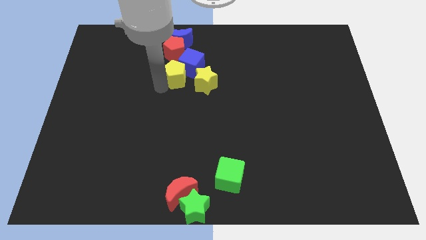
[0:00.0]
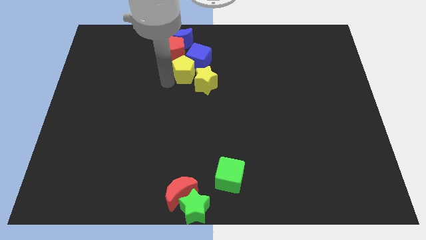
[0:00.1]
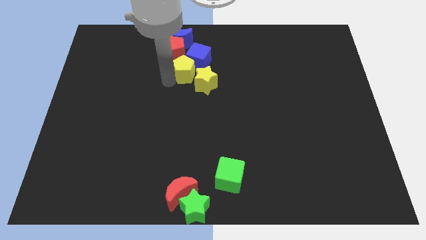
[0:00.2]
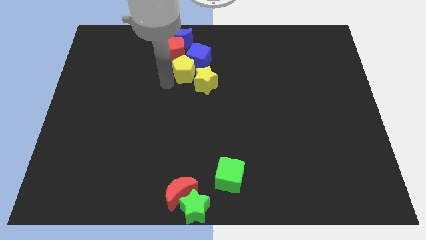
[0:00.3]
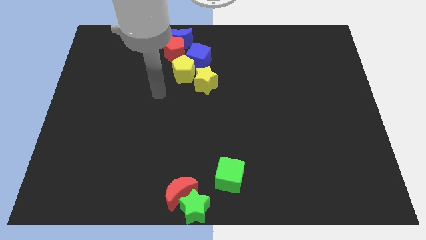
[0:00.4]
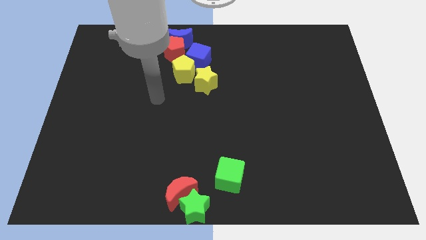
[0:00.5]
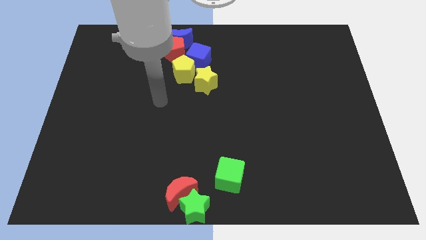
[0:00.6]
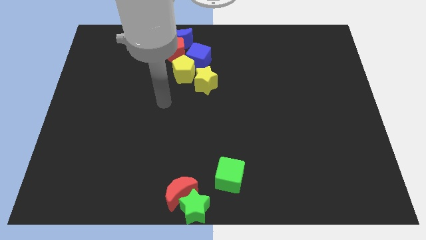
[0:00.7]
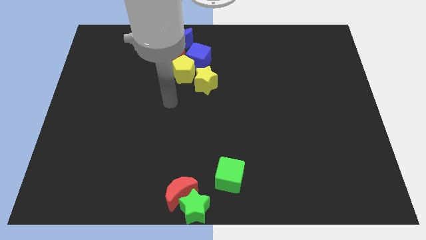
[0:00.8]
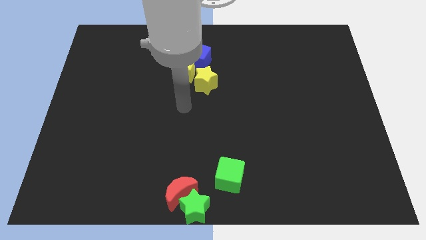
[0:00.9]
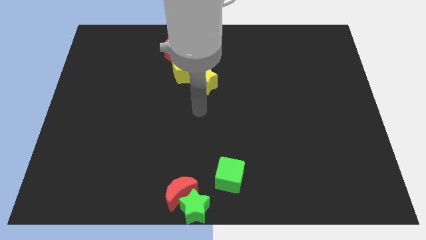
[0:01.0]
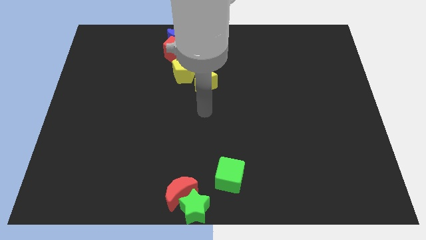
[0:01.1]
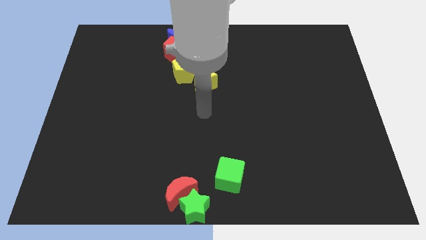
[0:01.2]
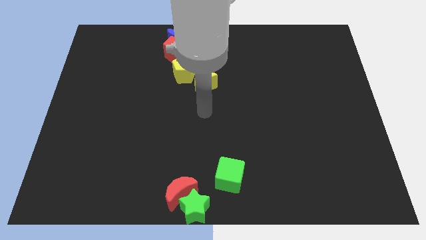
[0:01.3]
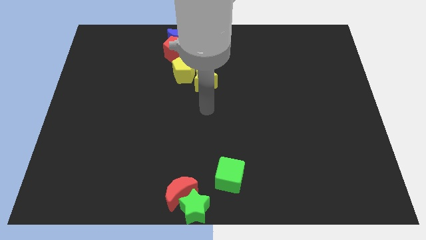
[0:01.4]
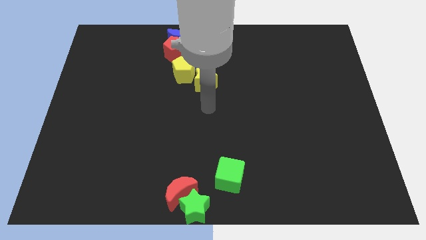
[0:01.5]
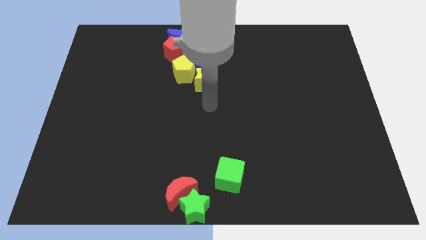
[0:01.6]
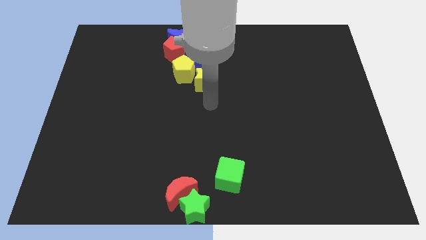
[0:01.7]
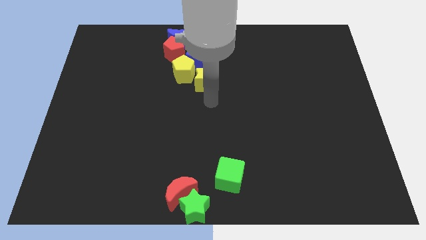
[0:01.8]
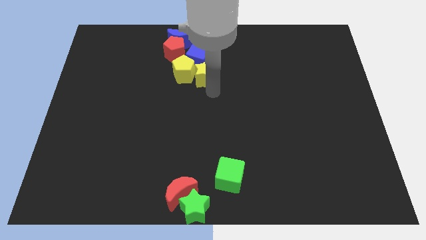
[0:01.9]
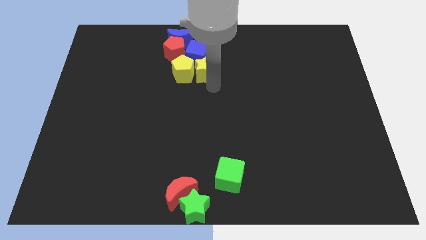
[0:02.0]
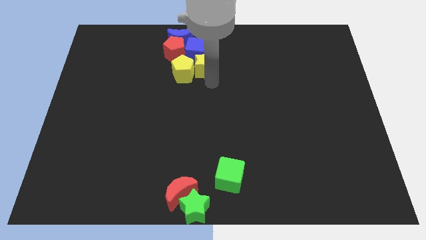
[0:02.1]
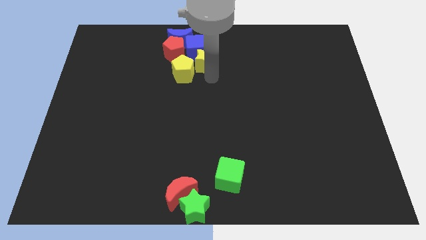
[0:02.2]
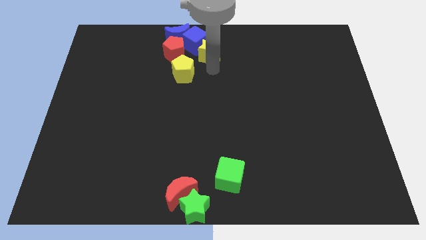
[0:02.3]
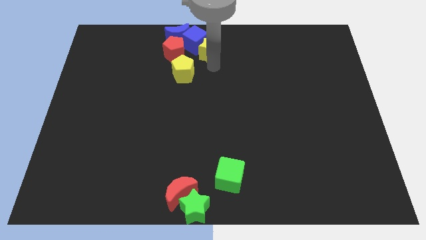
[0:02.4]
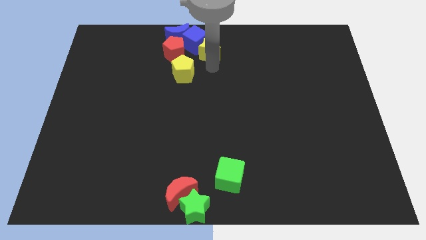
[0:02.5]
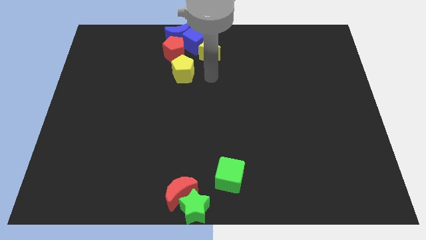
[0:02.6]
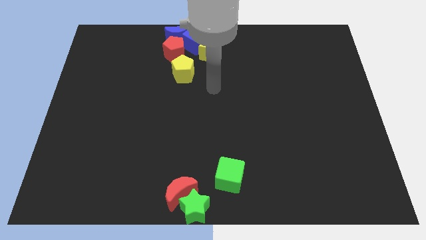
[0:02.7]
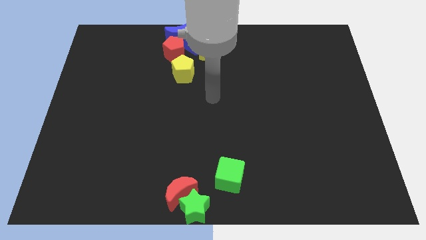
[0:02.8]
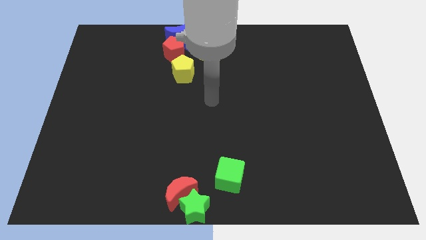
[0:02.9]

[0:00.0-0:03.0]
push the yellow star into the blue cube

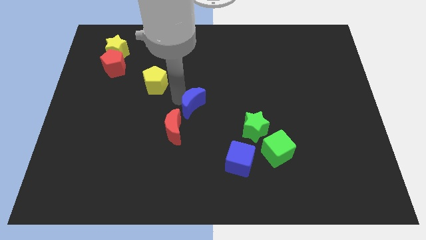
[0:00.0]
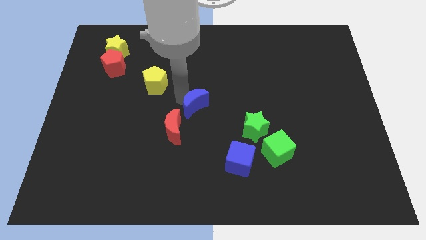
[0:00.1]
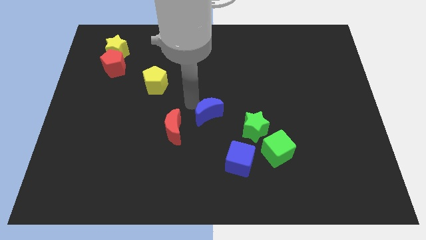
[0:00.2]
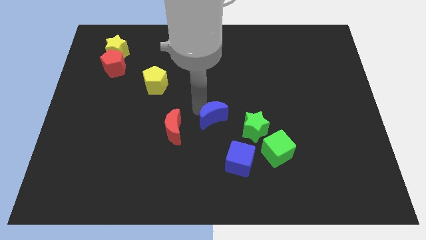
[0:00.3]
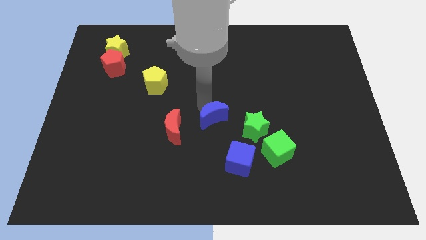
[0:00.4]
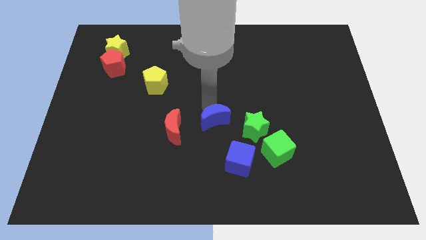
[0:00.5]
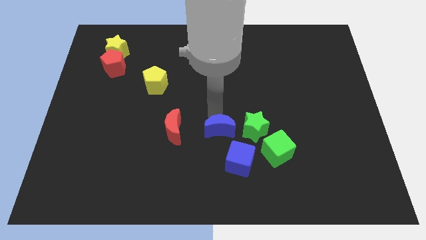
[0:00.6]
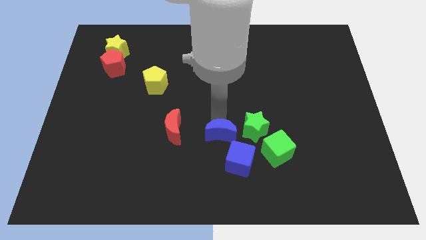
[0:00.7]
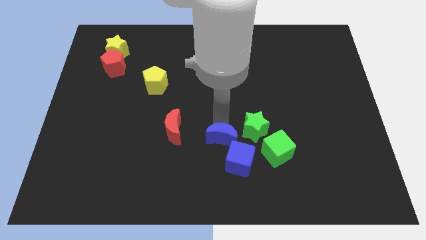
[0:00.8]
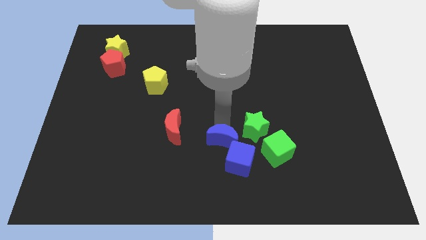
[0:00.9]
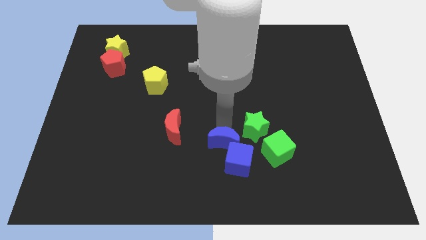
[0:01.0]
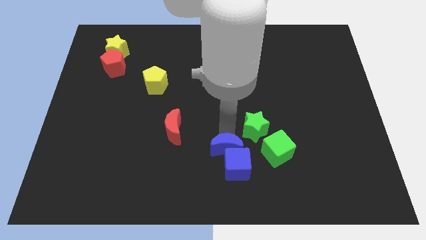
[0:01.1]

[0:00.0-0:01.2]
push the blue moon to the top of the blue cube

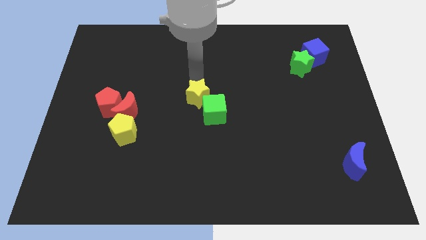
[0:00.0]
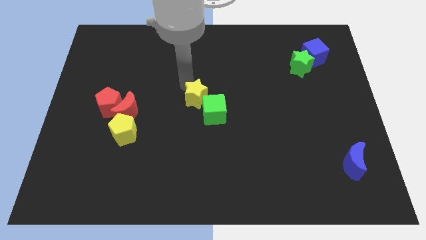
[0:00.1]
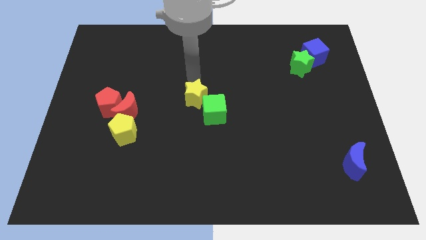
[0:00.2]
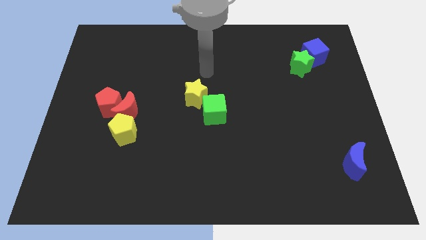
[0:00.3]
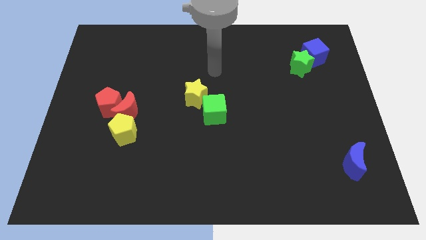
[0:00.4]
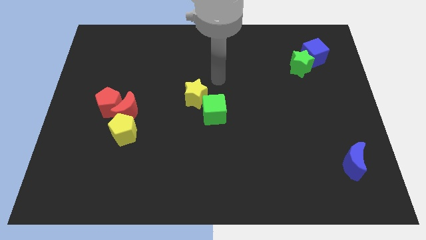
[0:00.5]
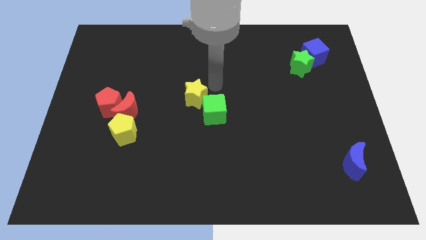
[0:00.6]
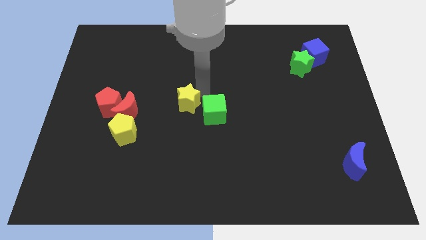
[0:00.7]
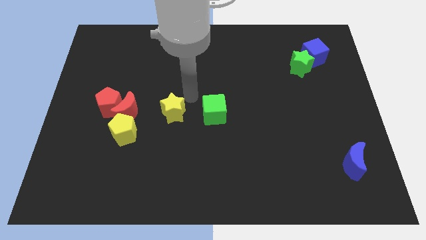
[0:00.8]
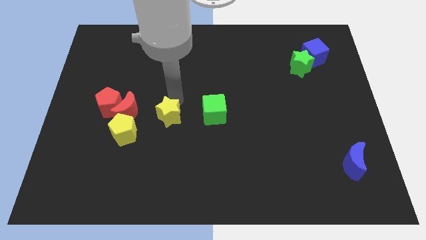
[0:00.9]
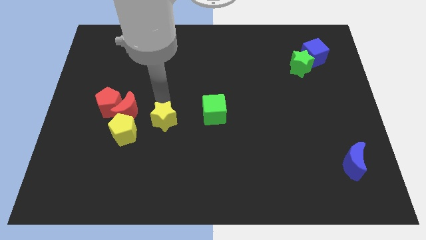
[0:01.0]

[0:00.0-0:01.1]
move the yellow star to the left of the green cube

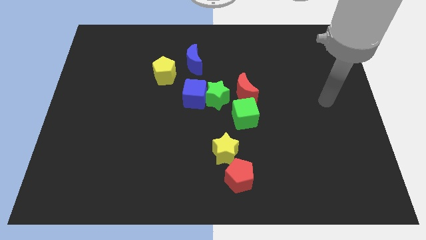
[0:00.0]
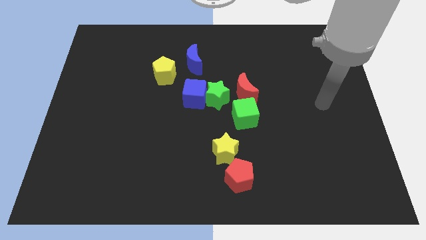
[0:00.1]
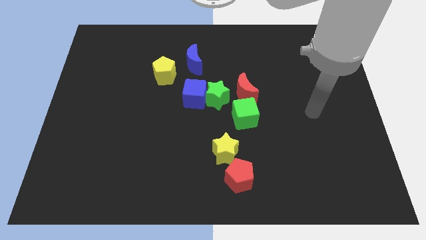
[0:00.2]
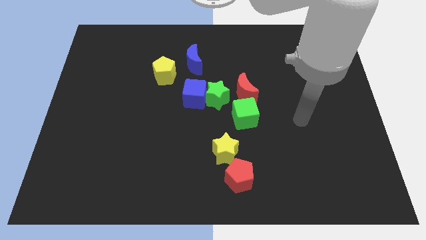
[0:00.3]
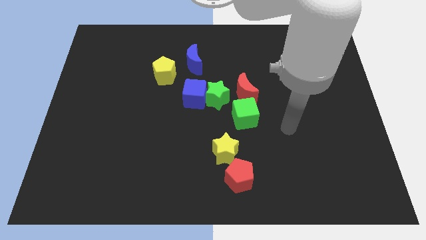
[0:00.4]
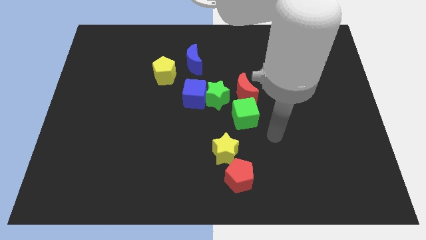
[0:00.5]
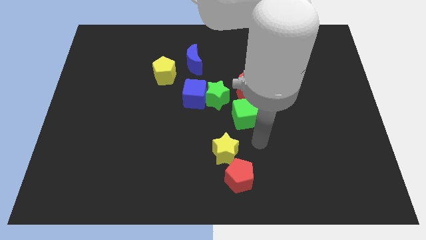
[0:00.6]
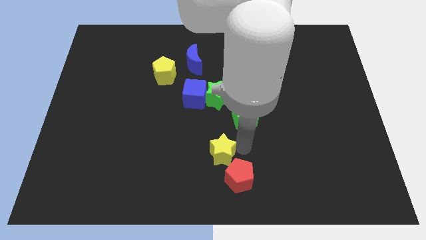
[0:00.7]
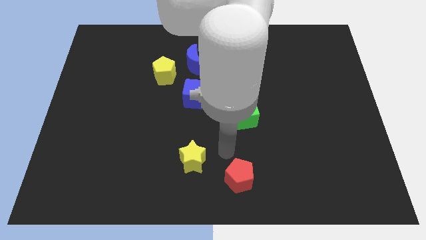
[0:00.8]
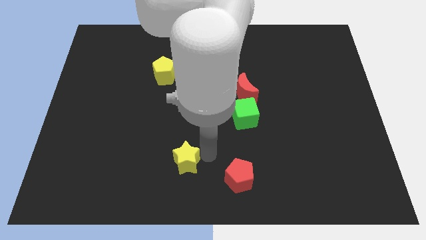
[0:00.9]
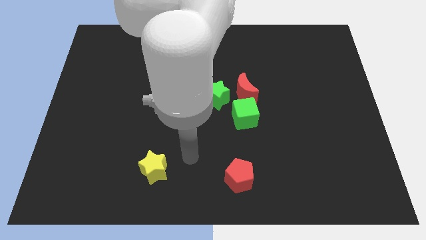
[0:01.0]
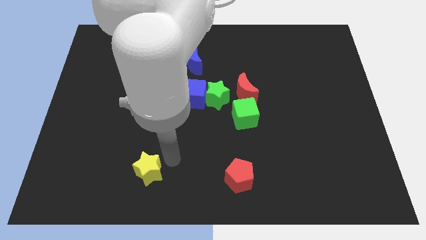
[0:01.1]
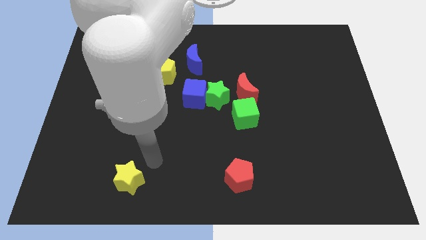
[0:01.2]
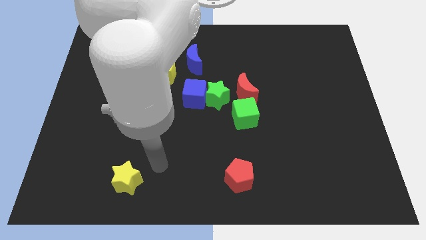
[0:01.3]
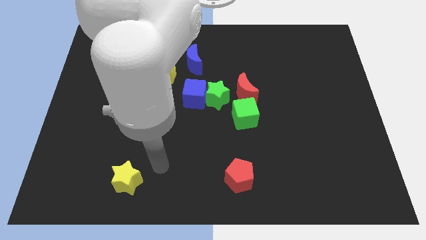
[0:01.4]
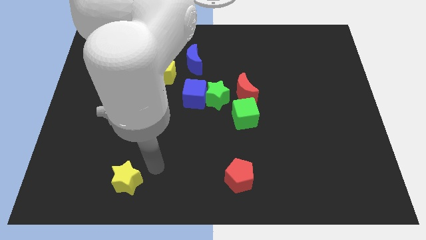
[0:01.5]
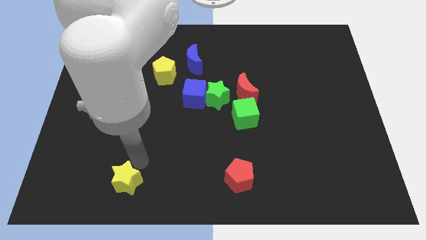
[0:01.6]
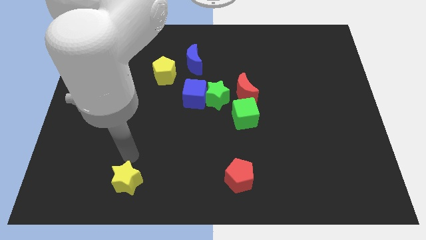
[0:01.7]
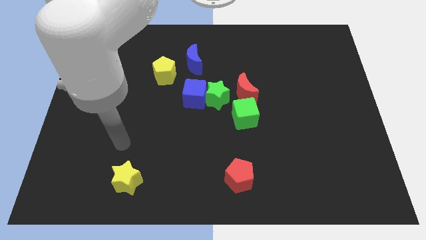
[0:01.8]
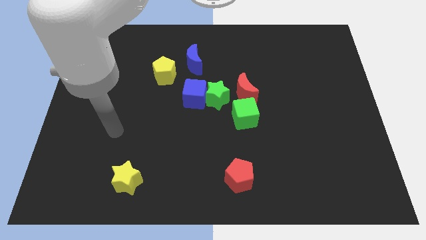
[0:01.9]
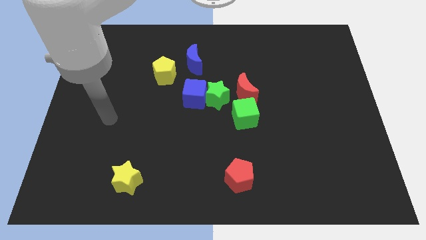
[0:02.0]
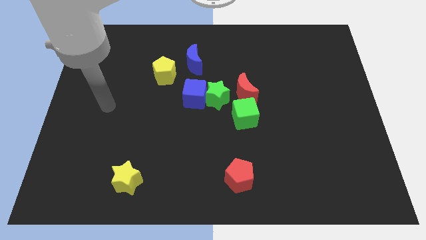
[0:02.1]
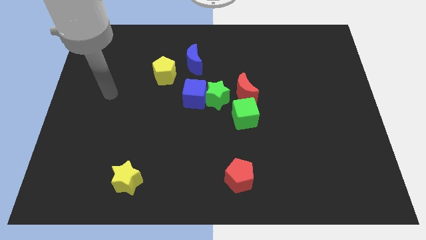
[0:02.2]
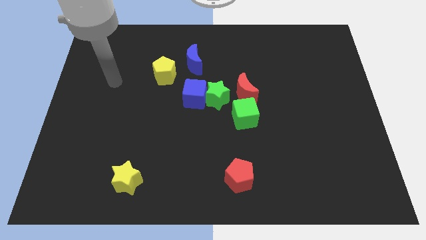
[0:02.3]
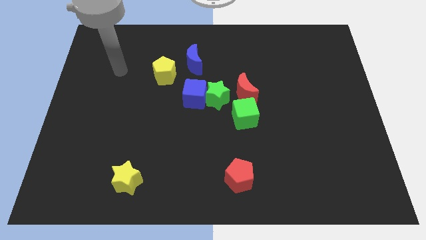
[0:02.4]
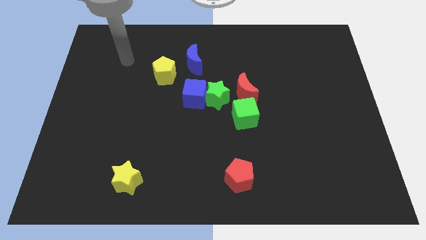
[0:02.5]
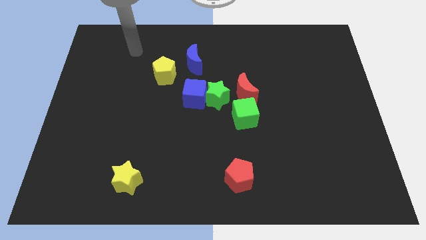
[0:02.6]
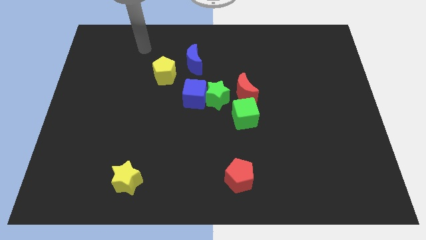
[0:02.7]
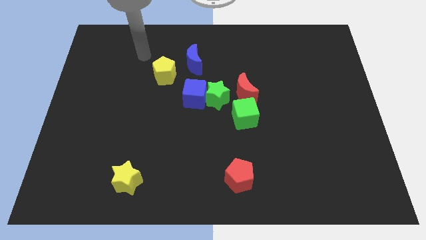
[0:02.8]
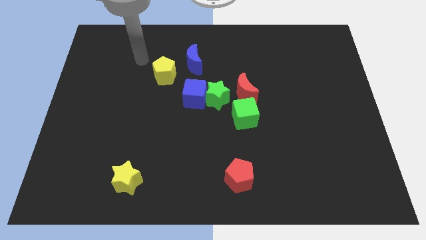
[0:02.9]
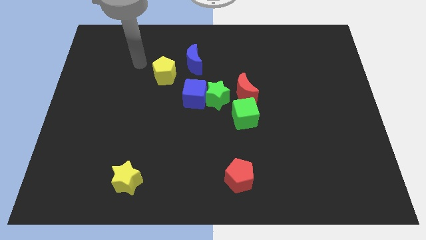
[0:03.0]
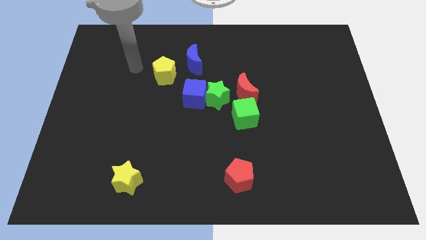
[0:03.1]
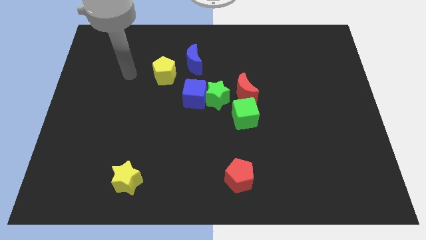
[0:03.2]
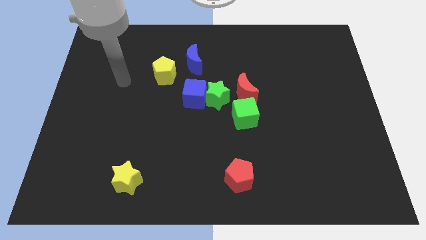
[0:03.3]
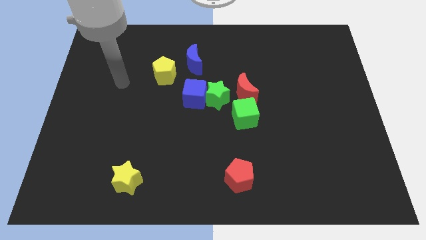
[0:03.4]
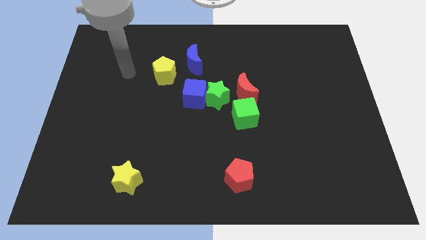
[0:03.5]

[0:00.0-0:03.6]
slightly move the yellow star from red pentagon
